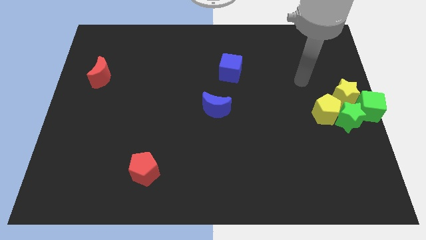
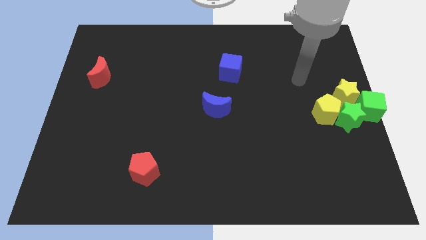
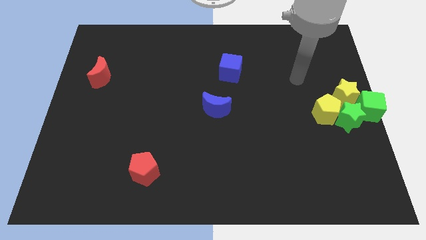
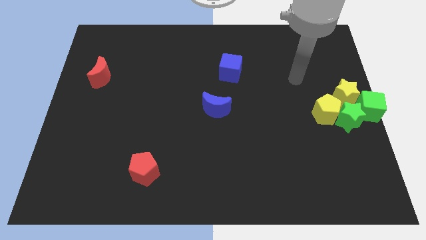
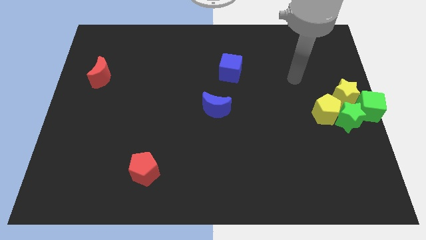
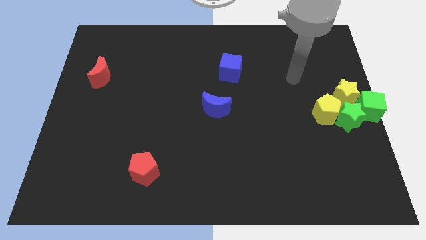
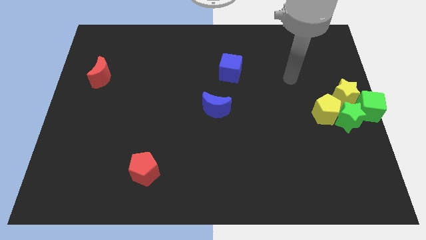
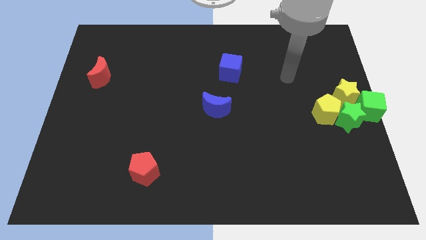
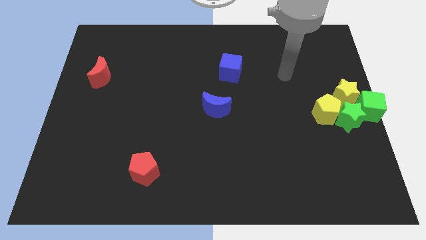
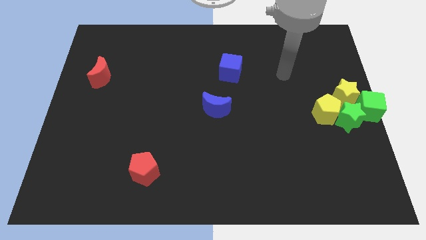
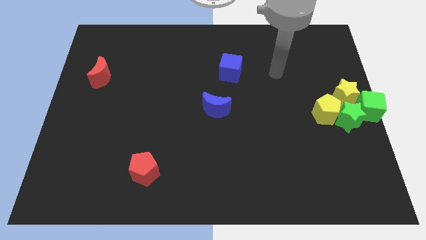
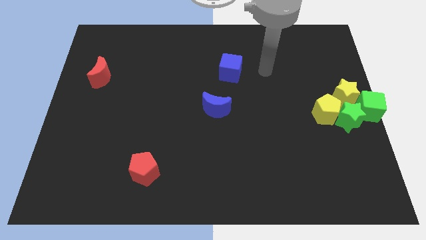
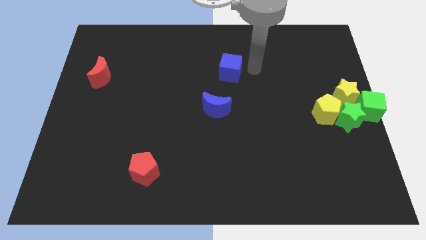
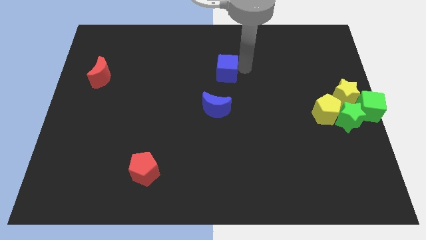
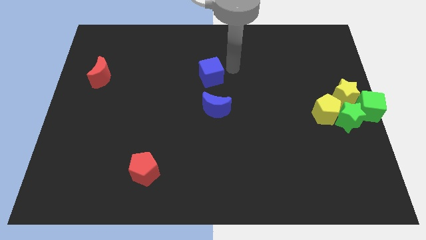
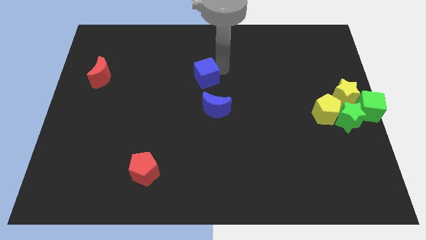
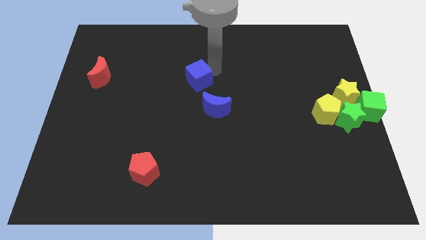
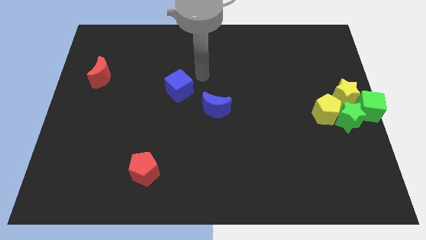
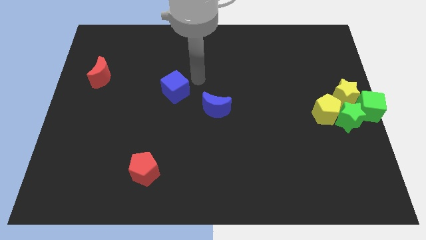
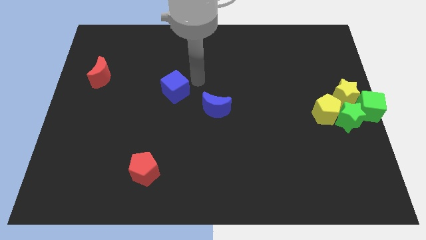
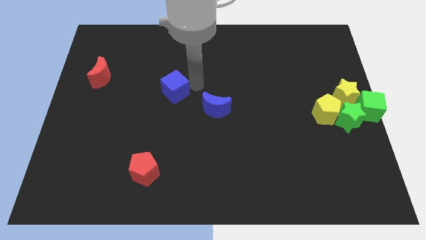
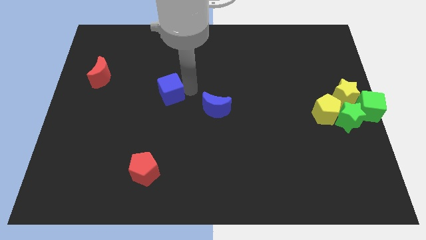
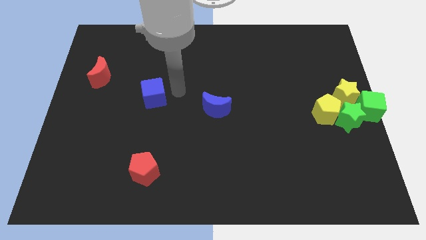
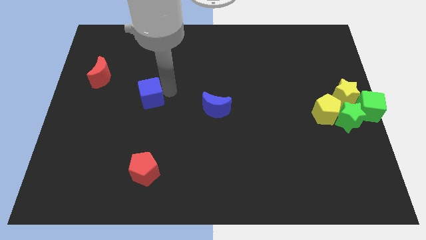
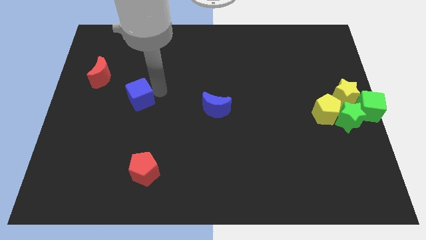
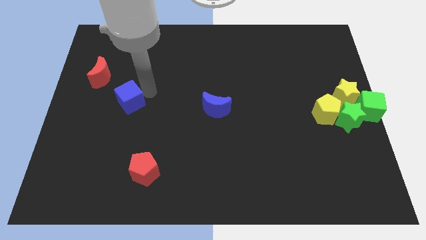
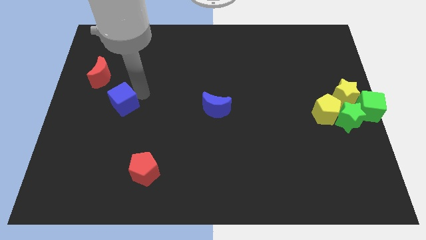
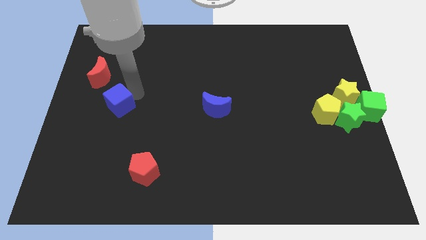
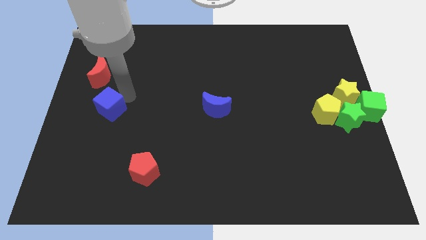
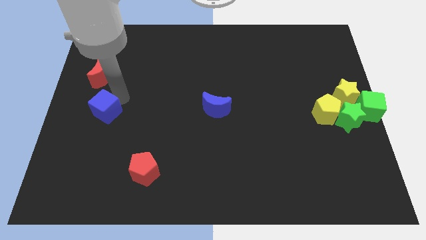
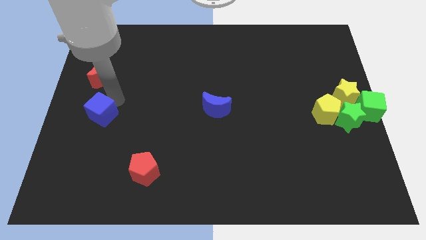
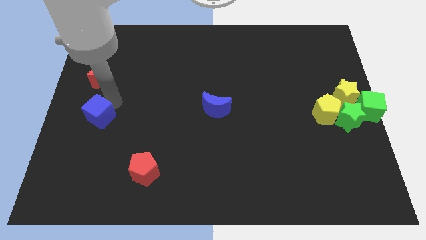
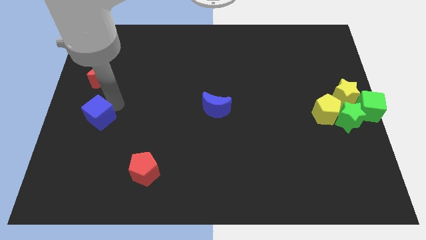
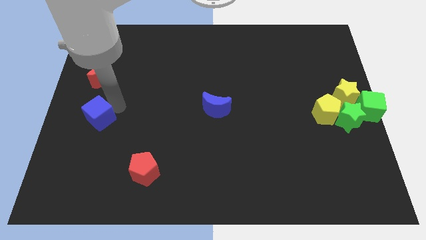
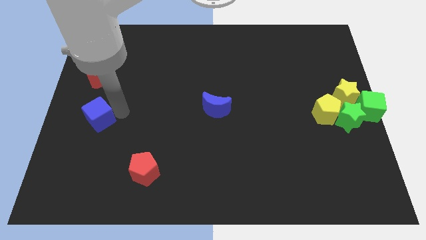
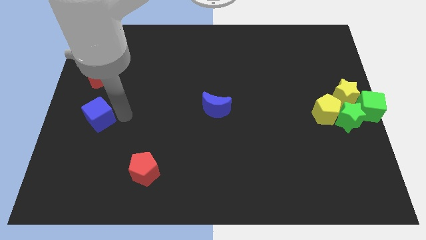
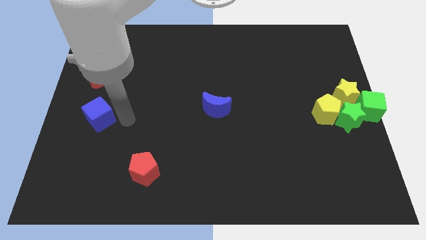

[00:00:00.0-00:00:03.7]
move the blue cube vertically to the bottom of the red crescent

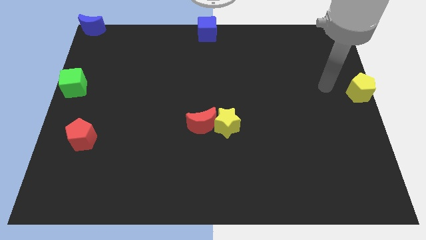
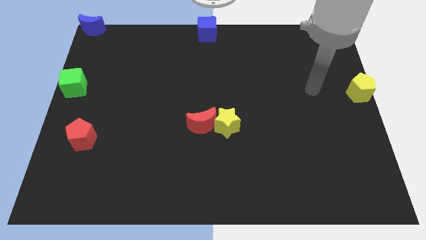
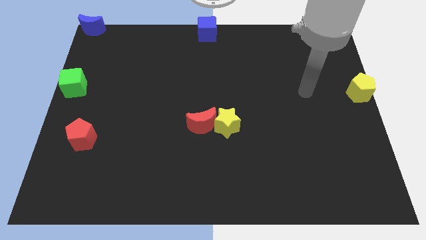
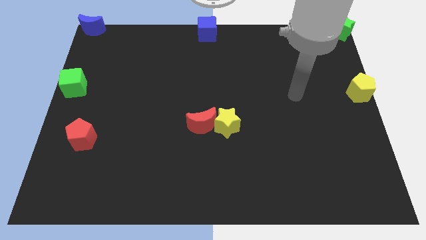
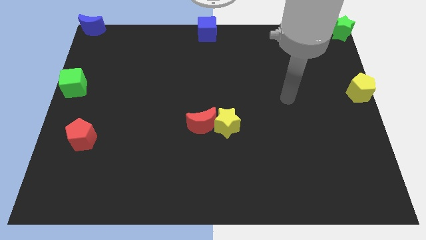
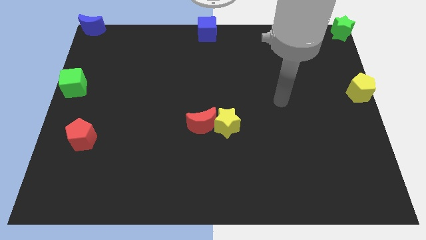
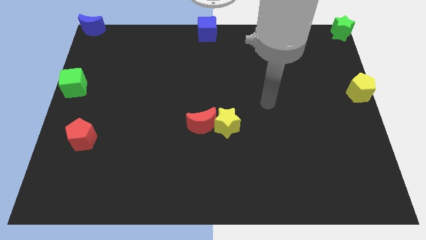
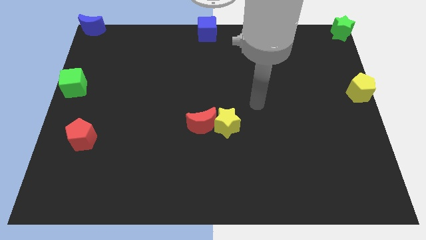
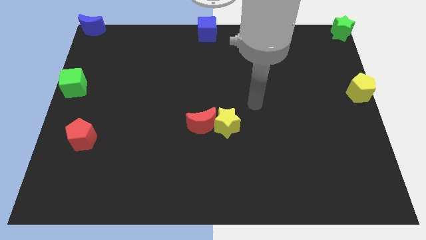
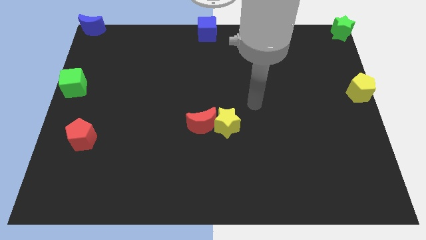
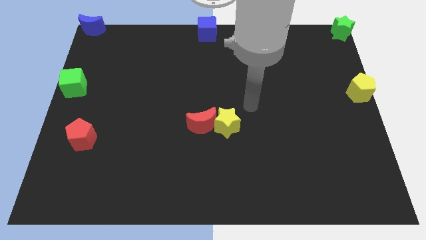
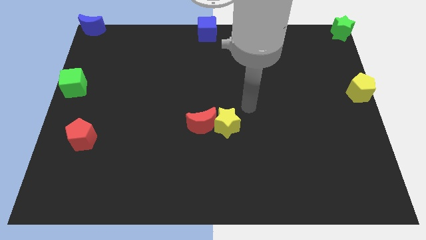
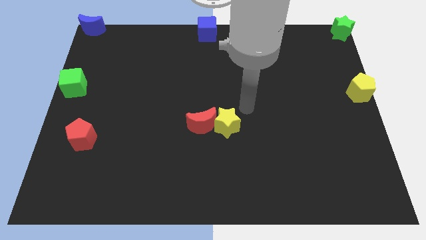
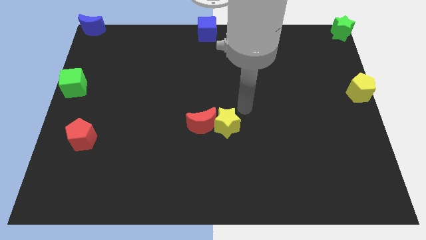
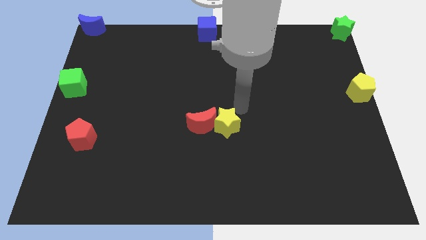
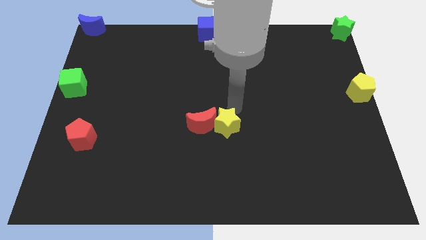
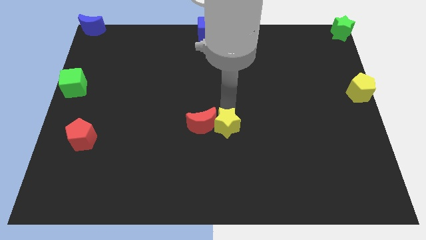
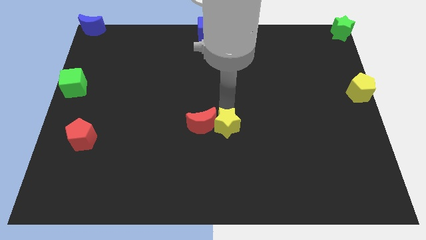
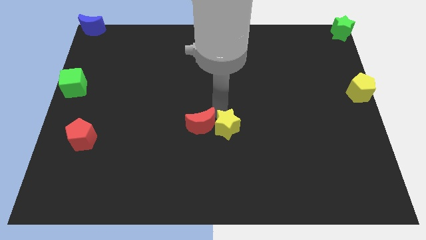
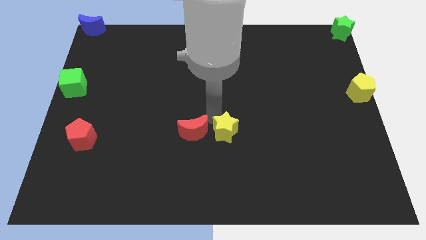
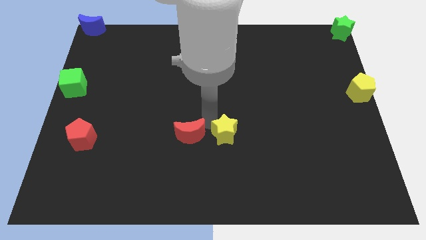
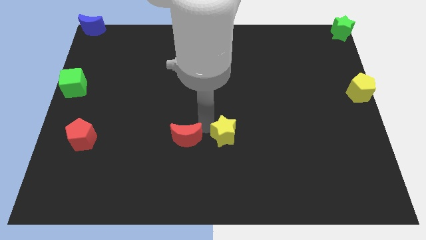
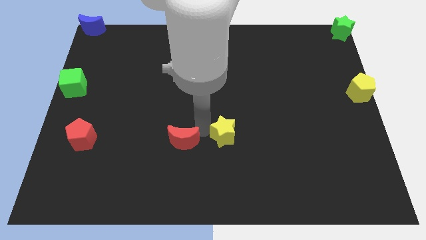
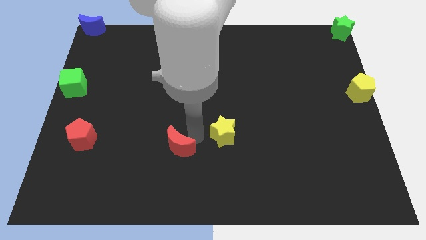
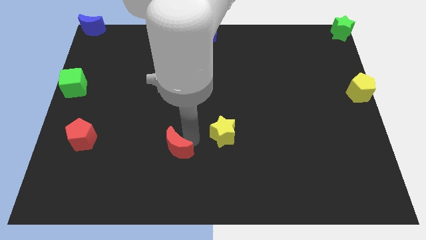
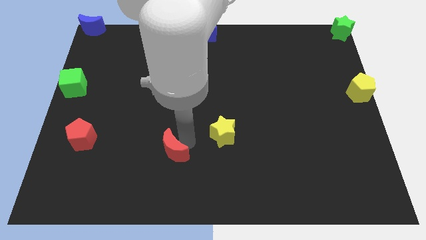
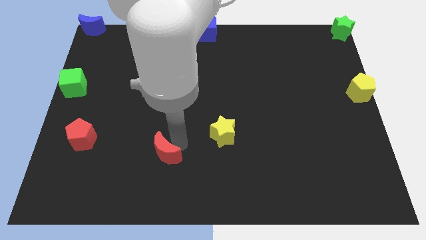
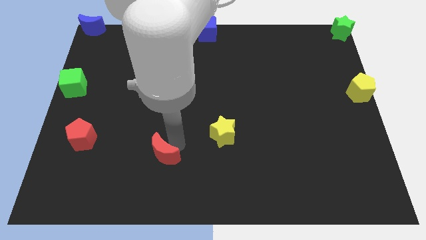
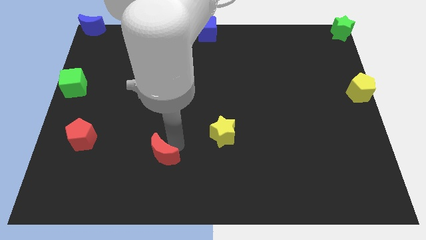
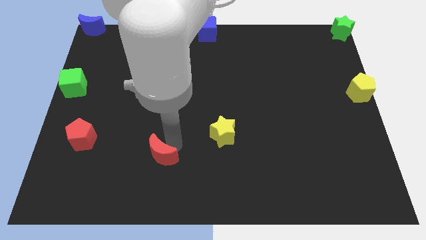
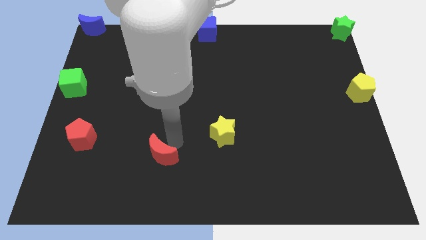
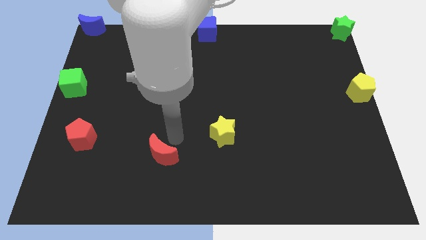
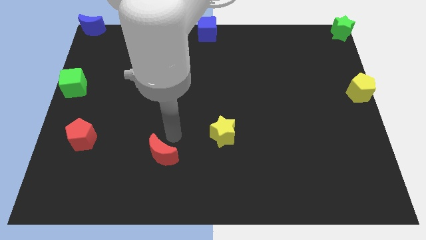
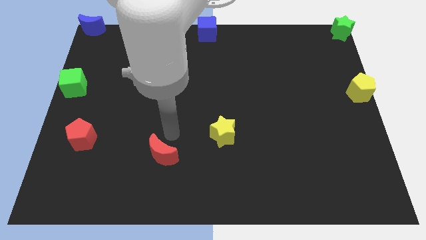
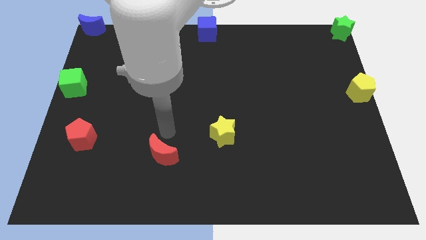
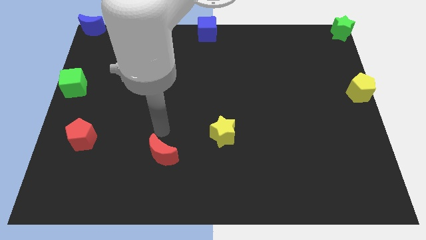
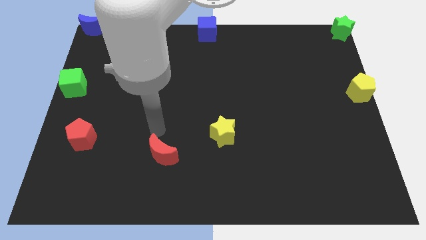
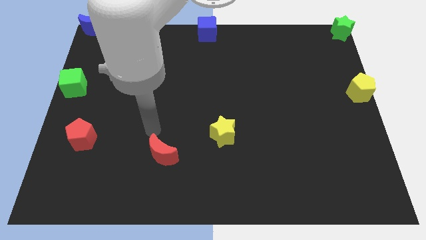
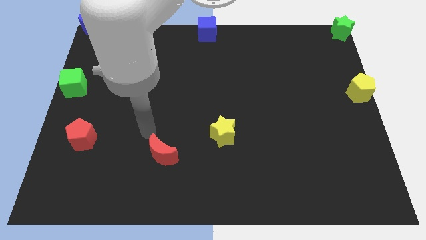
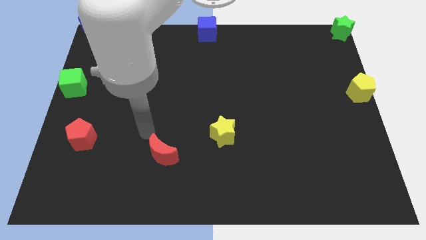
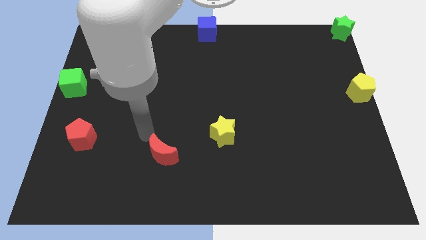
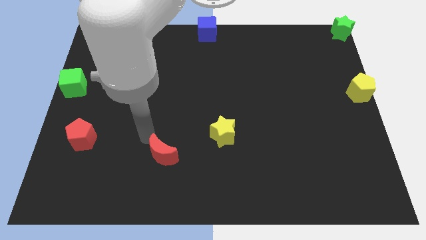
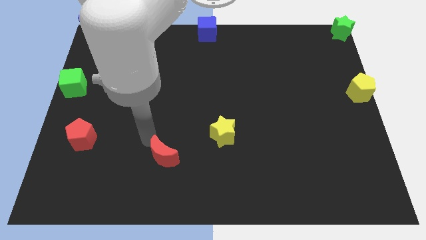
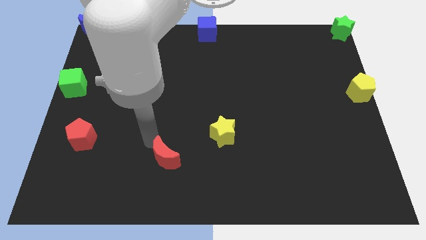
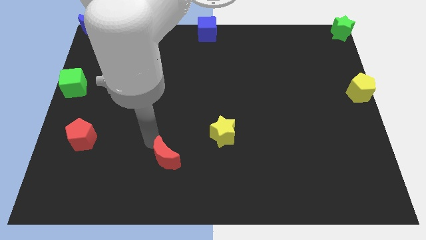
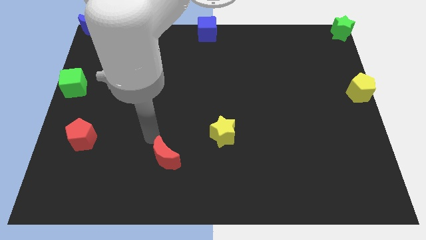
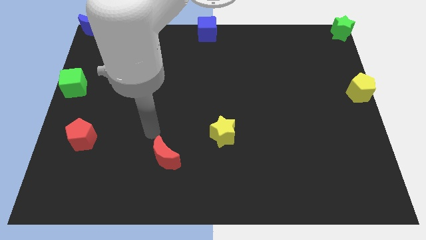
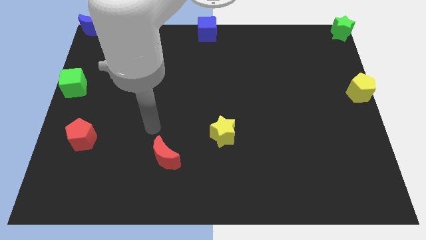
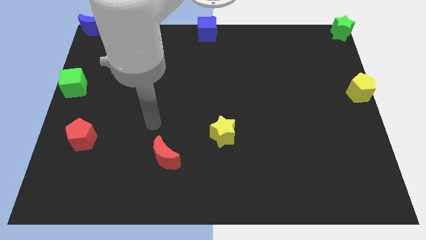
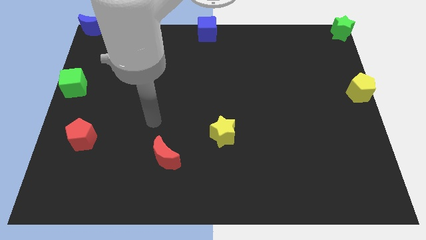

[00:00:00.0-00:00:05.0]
separate the red moon from yellow star

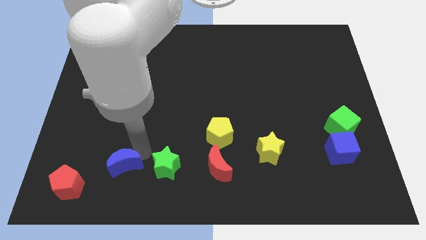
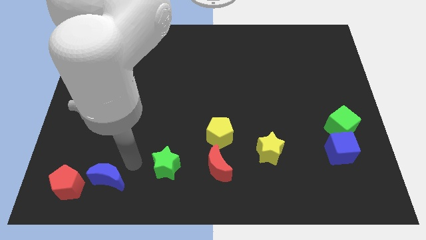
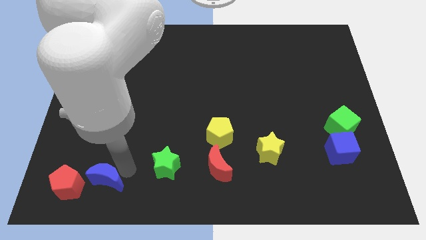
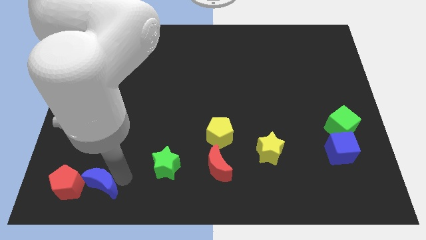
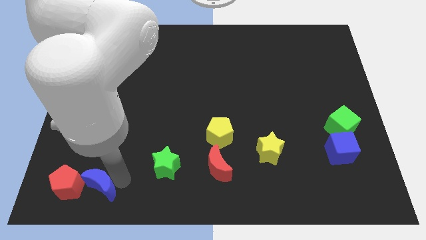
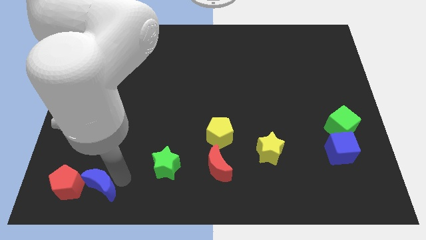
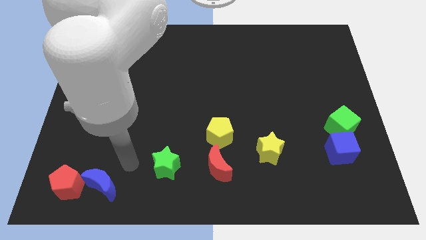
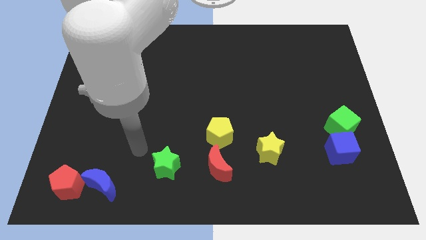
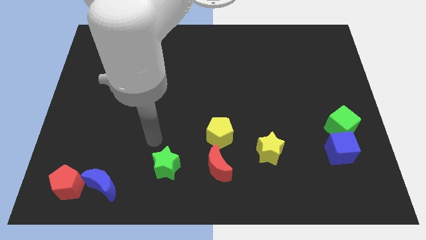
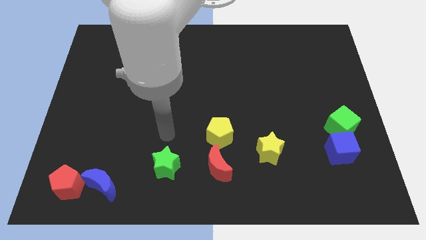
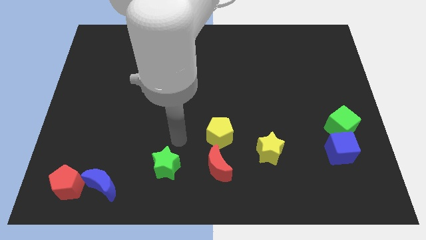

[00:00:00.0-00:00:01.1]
move the blue crescent to the bottom left of the board
